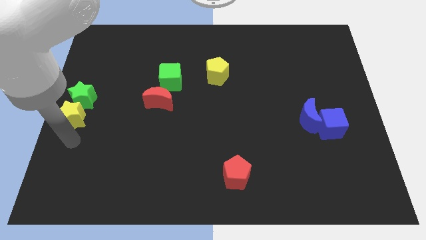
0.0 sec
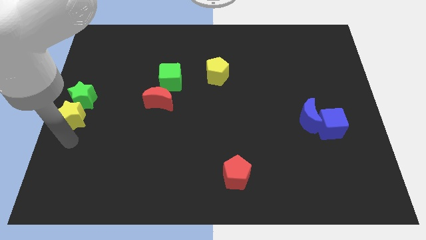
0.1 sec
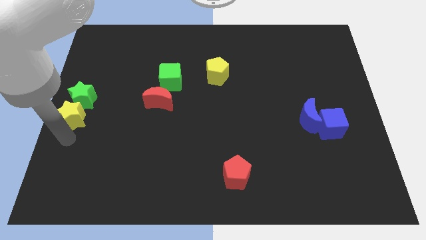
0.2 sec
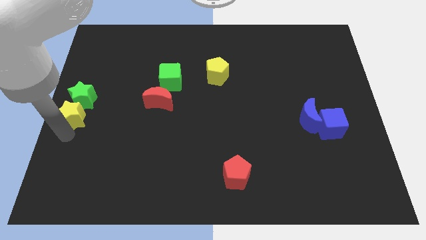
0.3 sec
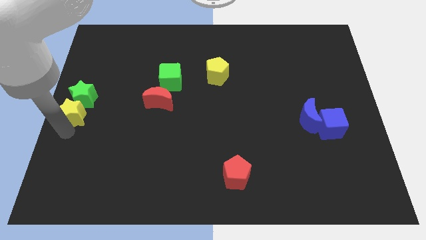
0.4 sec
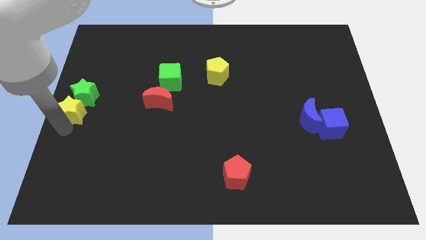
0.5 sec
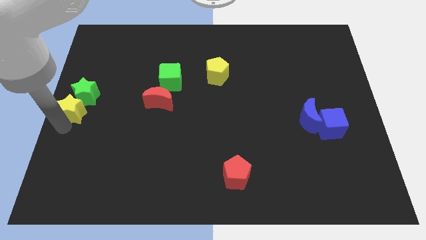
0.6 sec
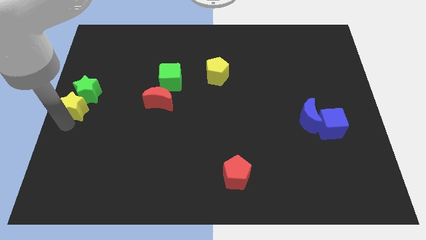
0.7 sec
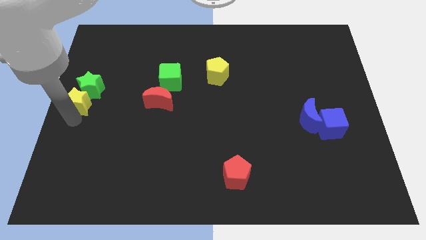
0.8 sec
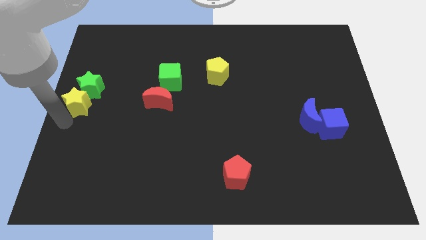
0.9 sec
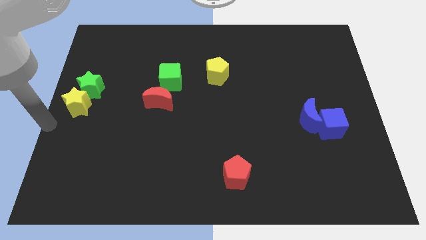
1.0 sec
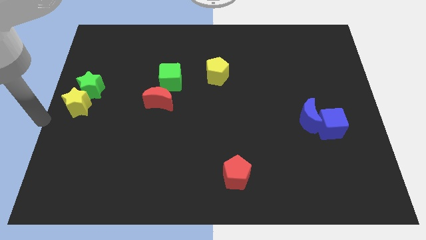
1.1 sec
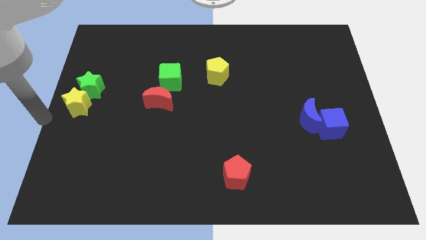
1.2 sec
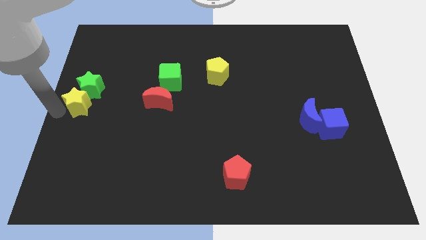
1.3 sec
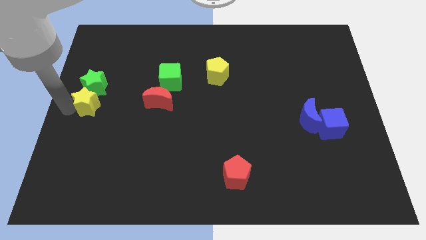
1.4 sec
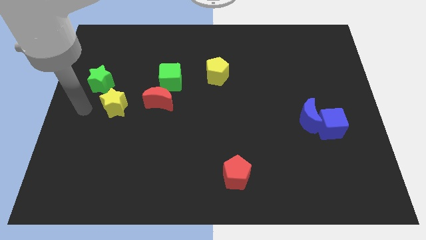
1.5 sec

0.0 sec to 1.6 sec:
move the group of stars slightly up

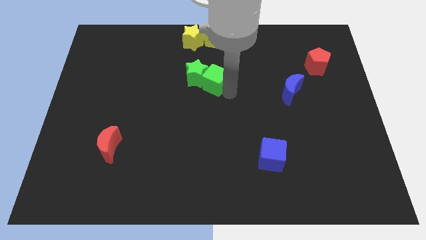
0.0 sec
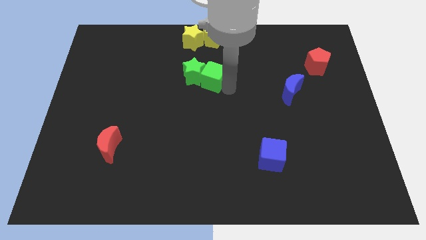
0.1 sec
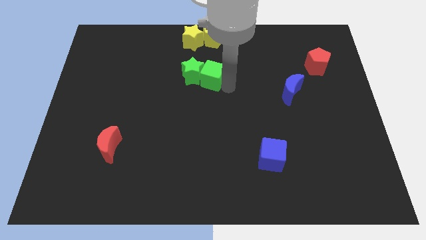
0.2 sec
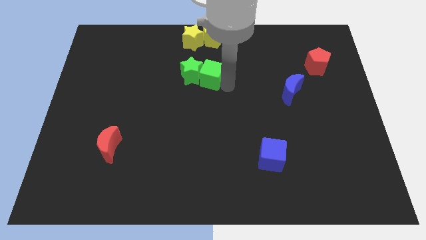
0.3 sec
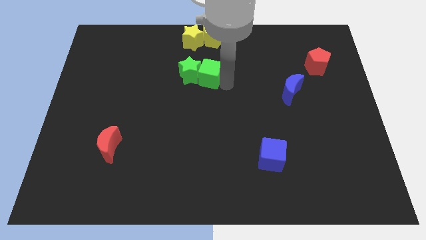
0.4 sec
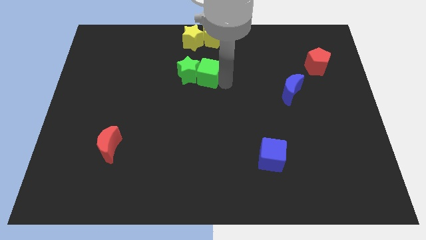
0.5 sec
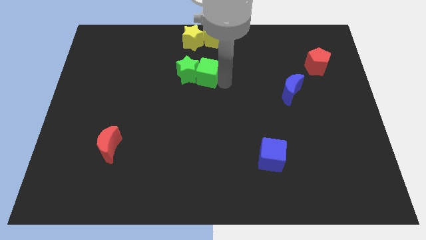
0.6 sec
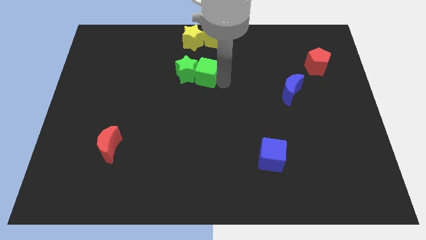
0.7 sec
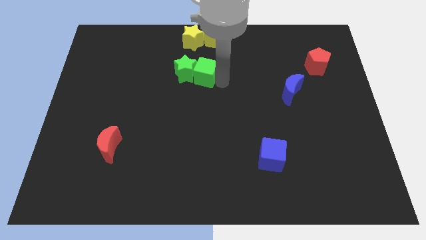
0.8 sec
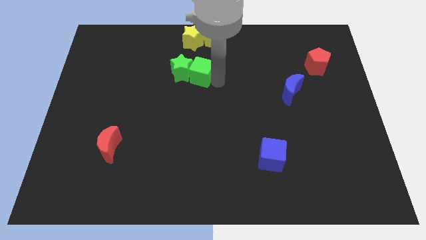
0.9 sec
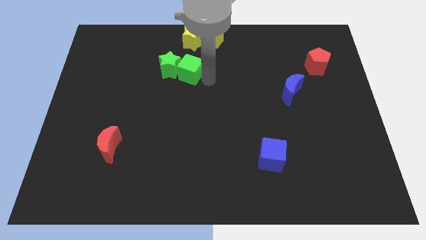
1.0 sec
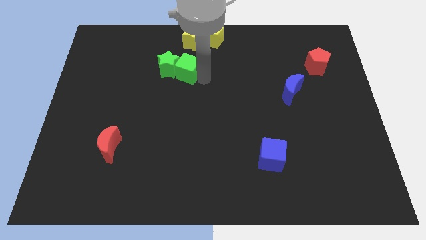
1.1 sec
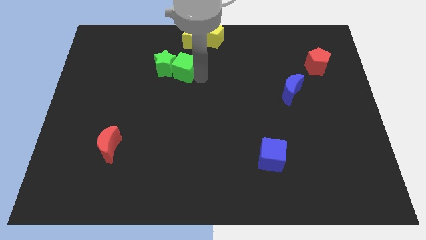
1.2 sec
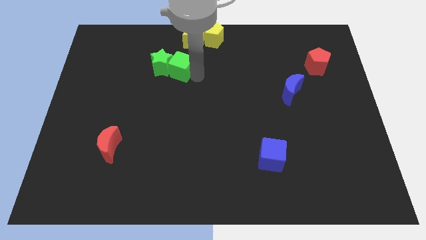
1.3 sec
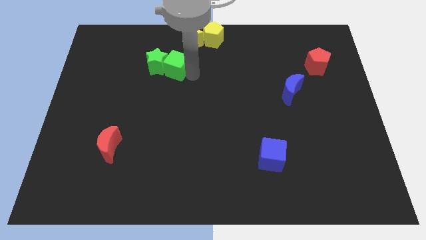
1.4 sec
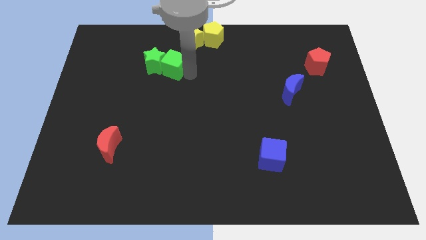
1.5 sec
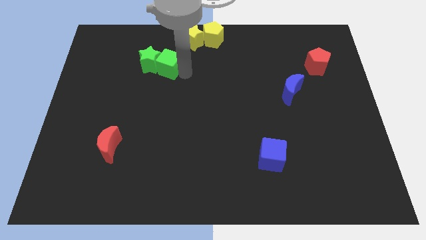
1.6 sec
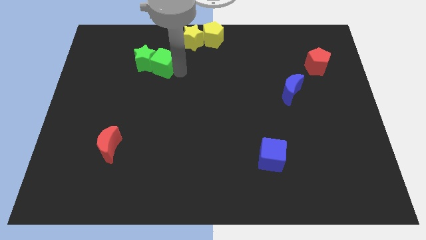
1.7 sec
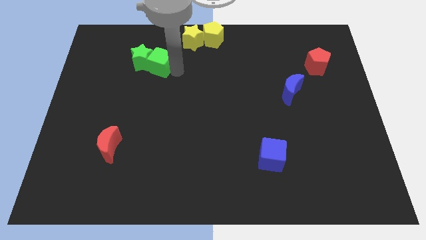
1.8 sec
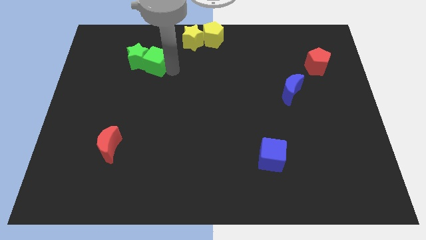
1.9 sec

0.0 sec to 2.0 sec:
move the green blocks slightly towards the top left of the board

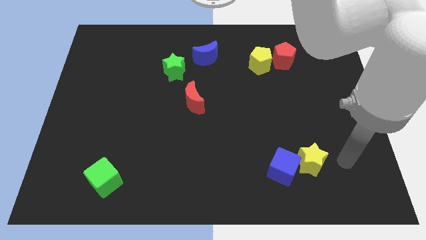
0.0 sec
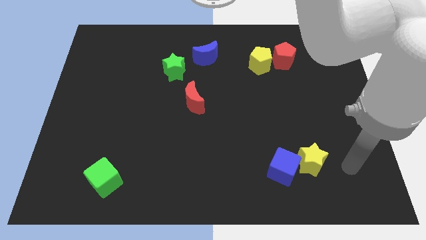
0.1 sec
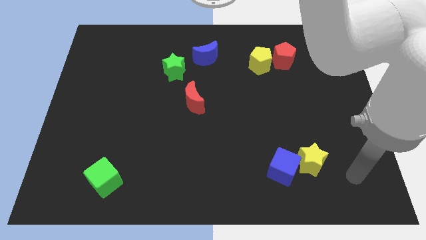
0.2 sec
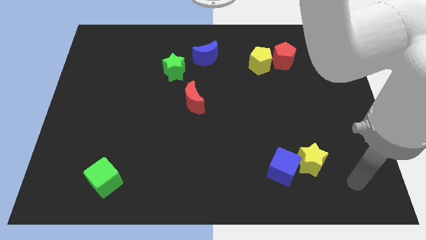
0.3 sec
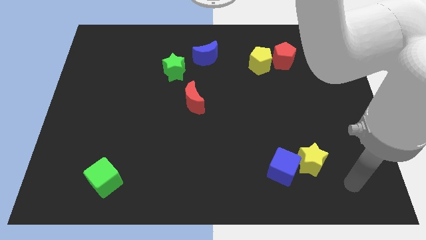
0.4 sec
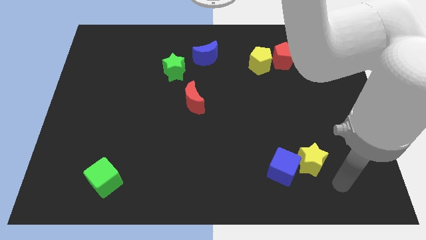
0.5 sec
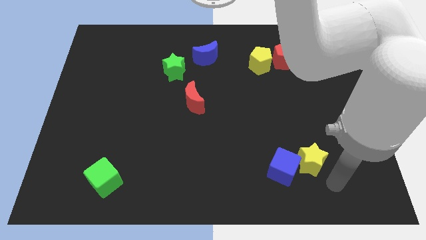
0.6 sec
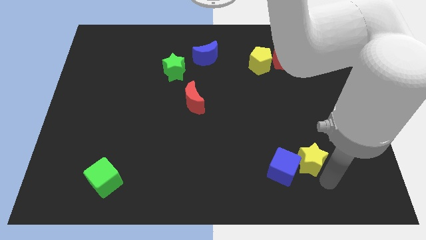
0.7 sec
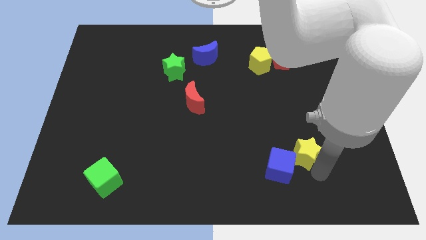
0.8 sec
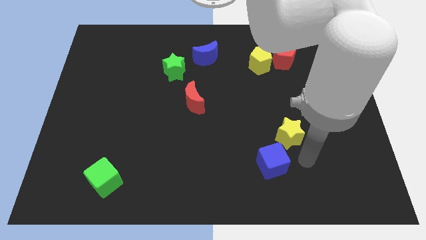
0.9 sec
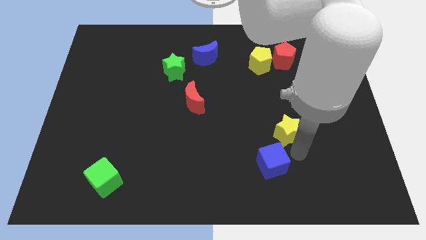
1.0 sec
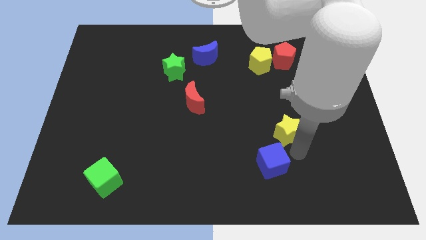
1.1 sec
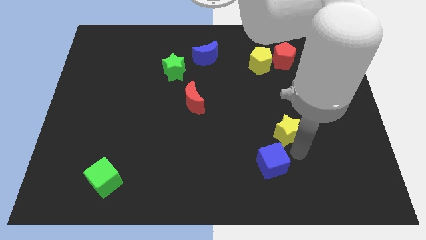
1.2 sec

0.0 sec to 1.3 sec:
push the yellow star to the top right of the blue cube

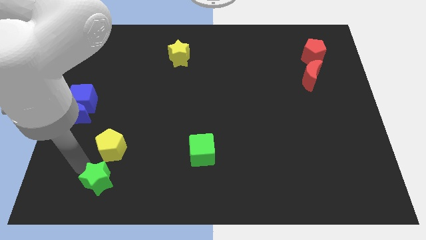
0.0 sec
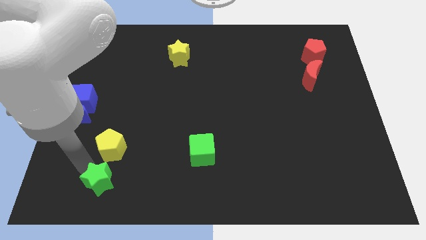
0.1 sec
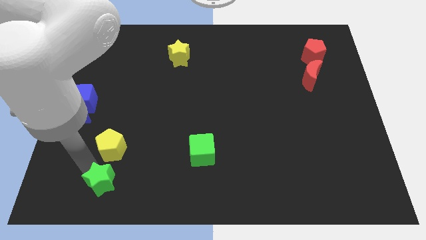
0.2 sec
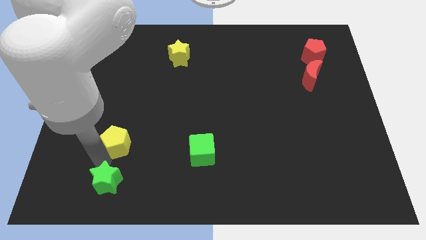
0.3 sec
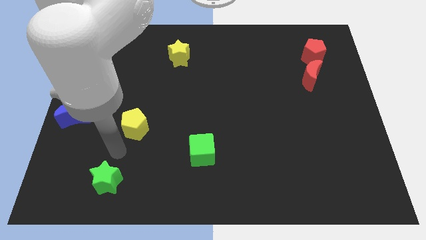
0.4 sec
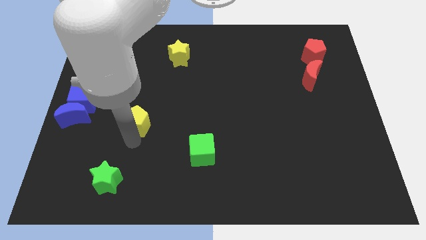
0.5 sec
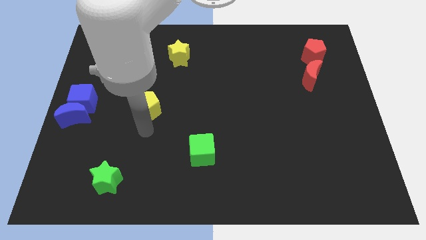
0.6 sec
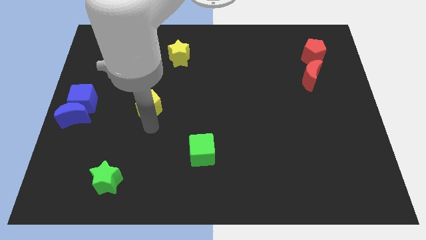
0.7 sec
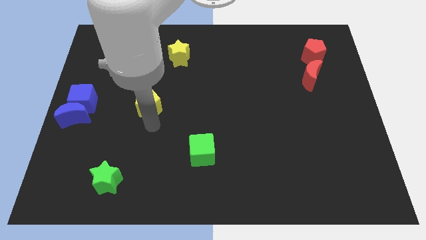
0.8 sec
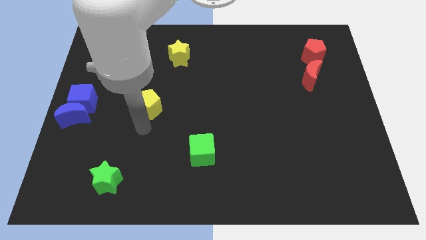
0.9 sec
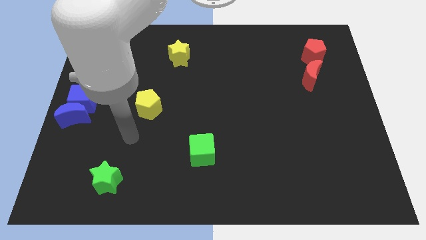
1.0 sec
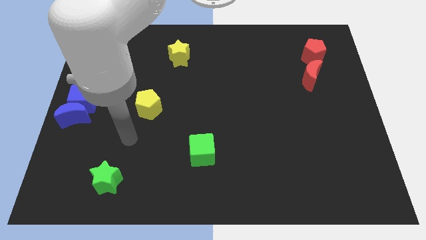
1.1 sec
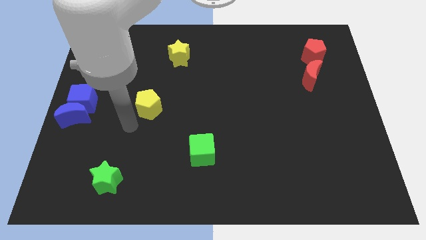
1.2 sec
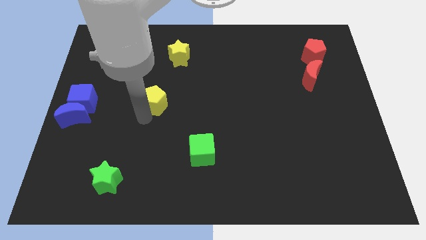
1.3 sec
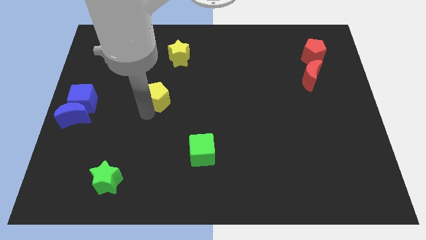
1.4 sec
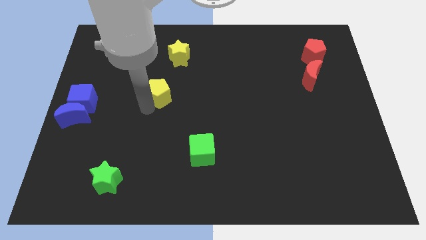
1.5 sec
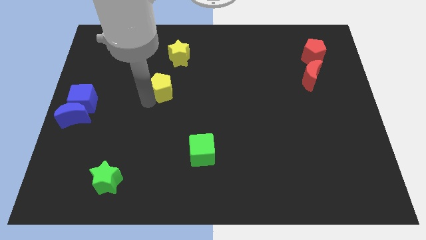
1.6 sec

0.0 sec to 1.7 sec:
move yellow pentagon diagonally up

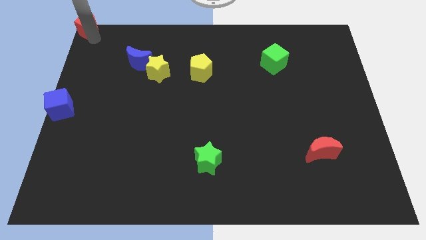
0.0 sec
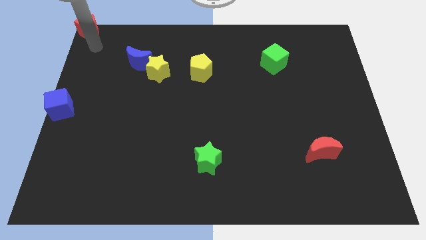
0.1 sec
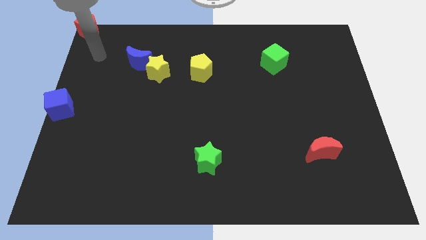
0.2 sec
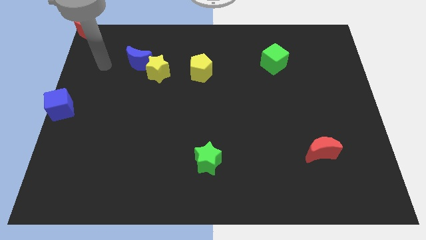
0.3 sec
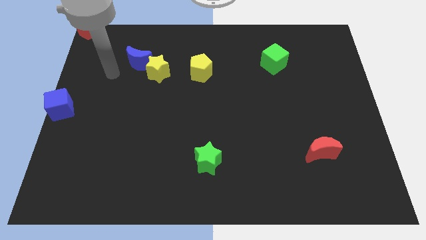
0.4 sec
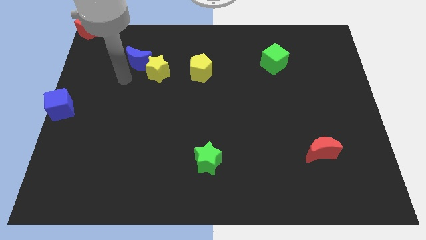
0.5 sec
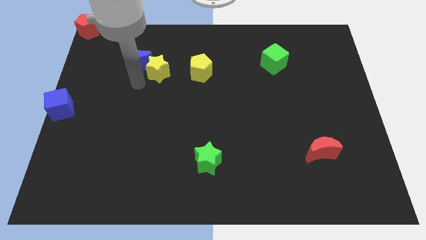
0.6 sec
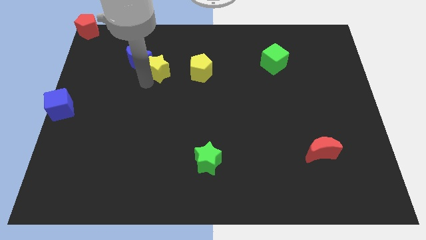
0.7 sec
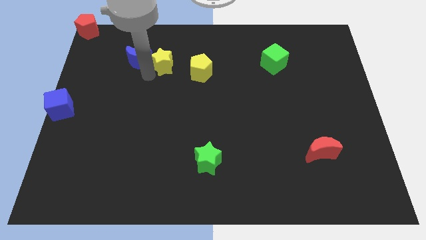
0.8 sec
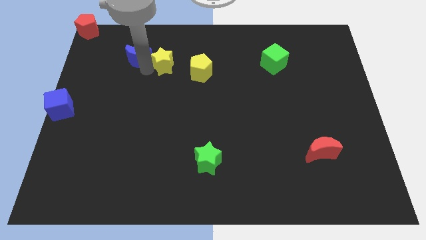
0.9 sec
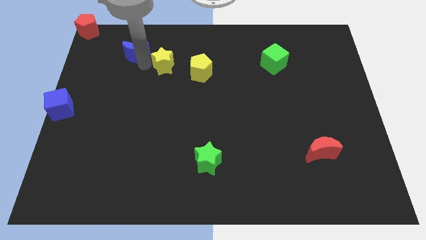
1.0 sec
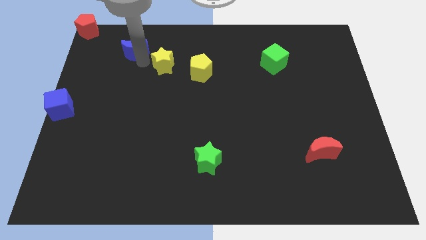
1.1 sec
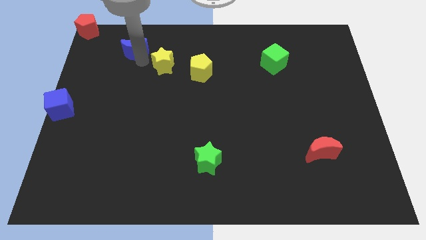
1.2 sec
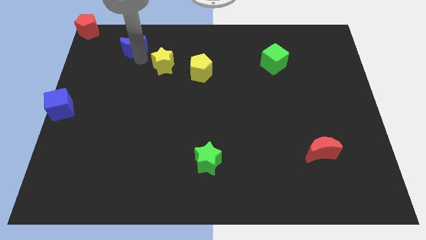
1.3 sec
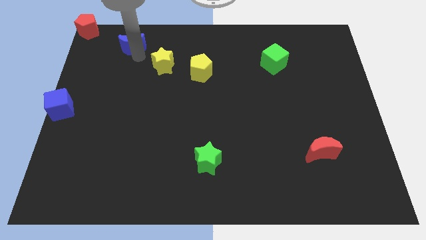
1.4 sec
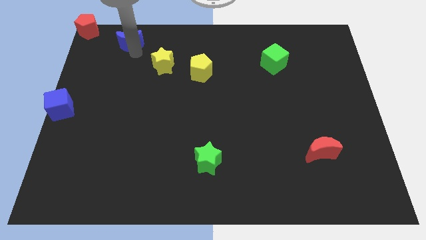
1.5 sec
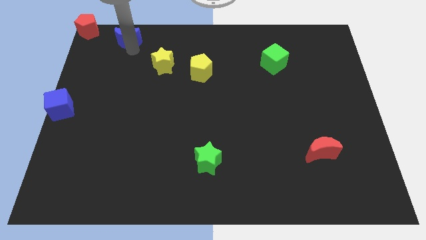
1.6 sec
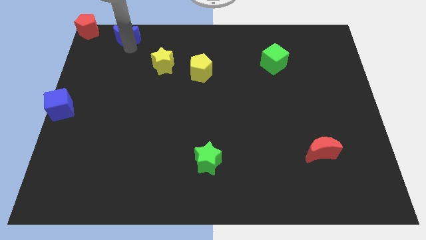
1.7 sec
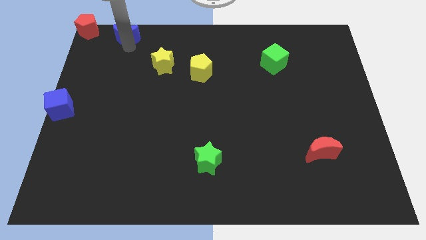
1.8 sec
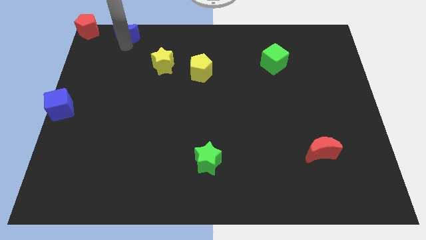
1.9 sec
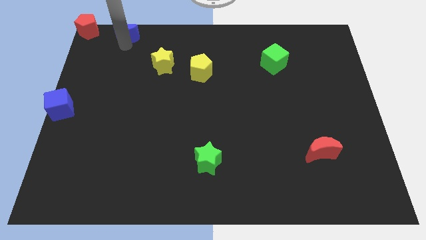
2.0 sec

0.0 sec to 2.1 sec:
slide the blue crescent towards the top left

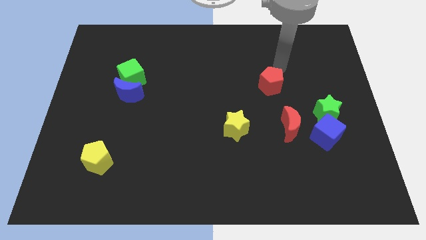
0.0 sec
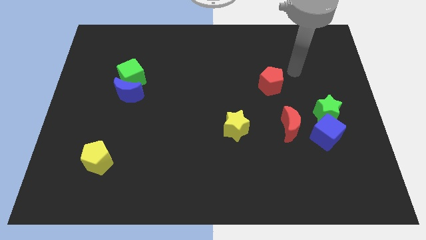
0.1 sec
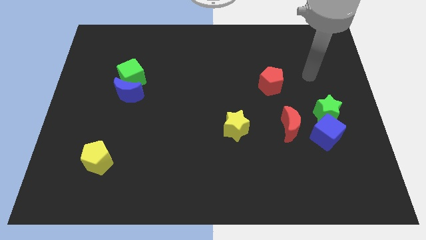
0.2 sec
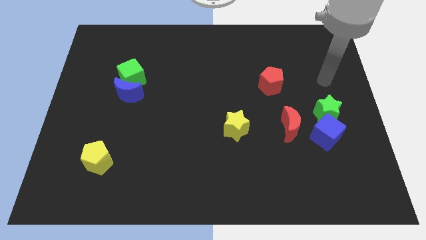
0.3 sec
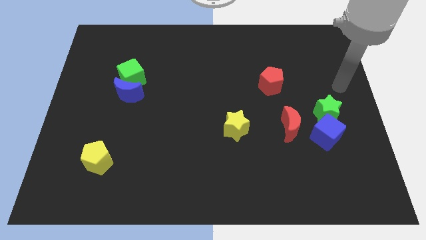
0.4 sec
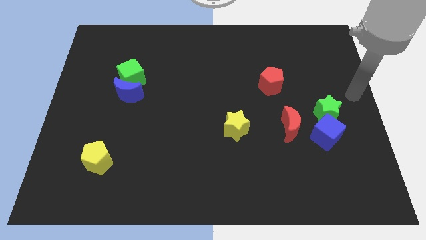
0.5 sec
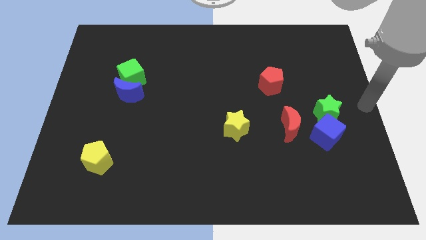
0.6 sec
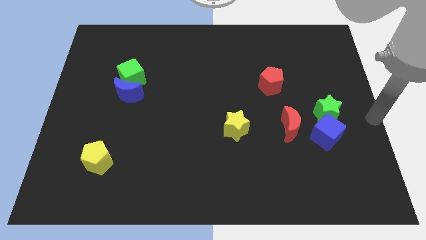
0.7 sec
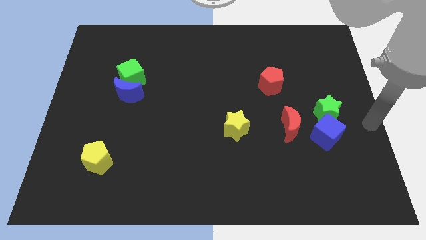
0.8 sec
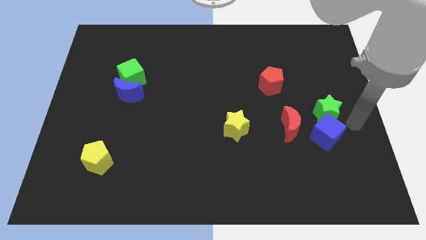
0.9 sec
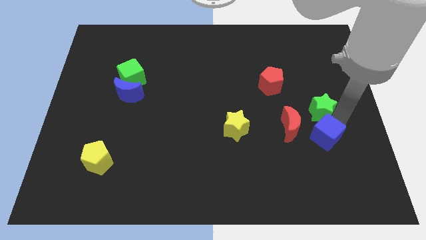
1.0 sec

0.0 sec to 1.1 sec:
push the green star slightly upward
